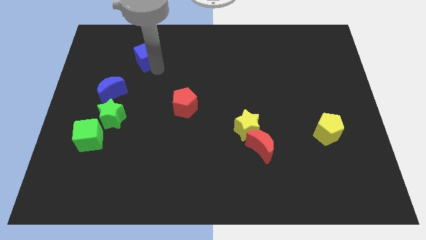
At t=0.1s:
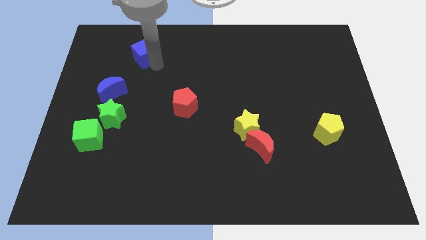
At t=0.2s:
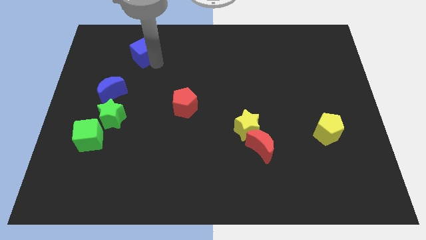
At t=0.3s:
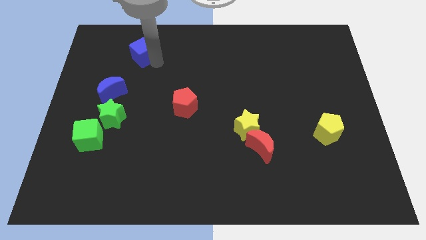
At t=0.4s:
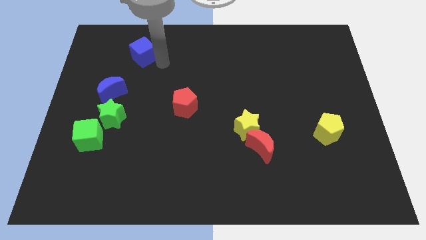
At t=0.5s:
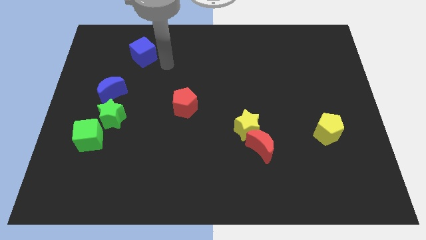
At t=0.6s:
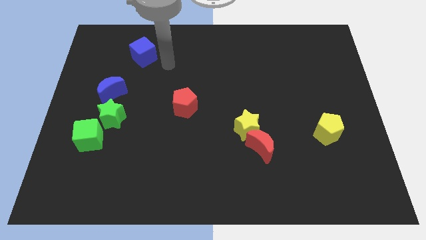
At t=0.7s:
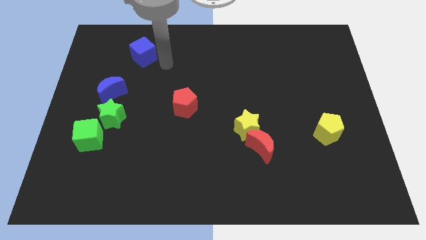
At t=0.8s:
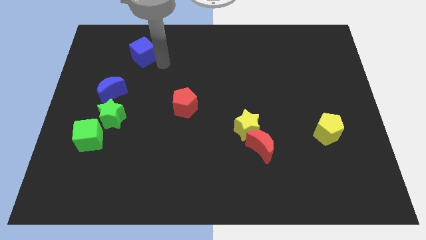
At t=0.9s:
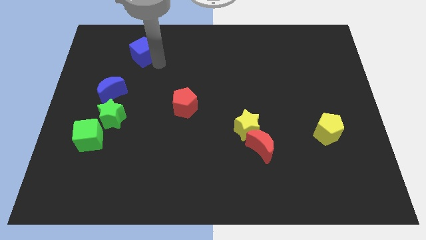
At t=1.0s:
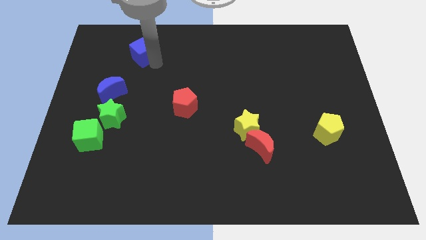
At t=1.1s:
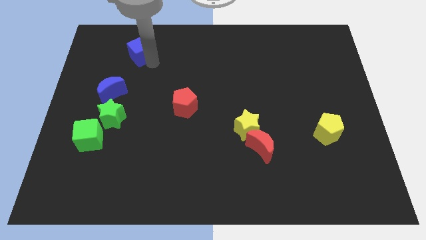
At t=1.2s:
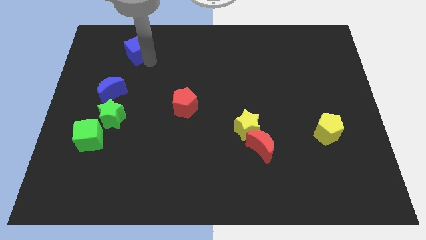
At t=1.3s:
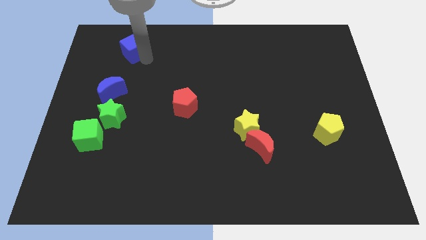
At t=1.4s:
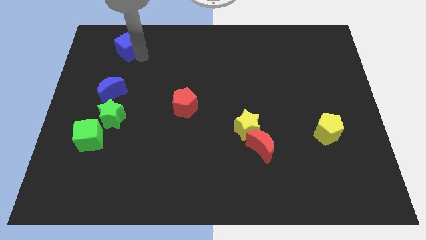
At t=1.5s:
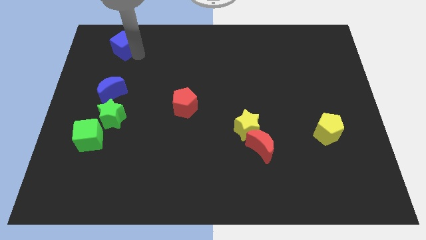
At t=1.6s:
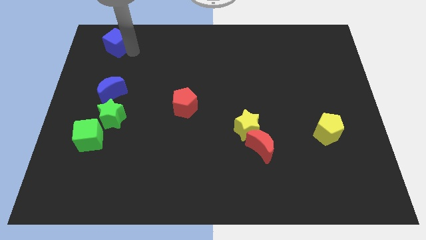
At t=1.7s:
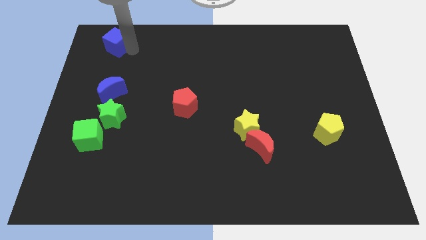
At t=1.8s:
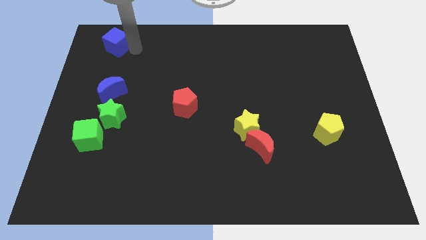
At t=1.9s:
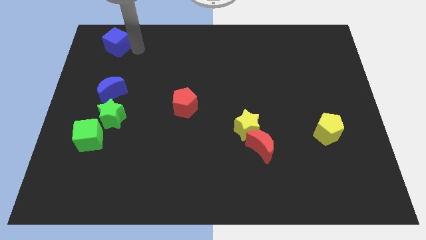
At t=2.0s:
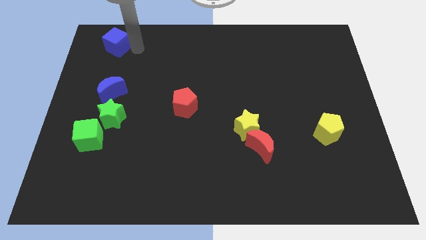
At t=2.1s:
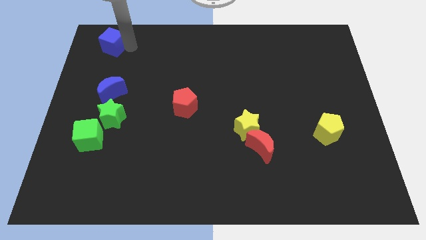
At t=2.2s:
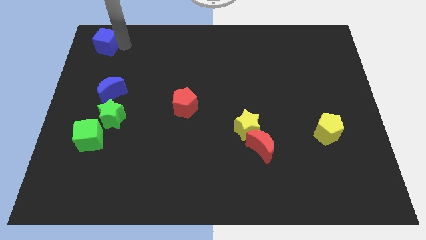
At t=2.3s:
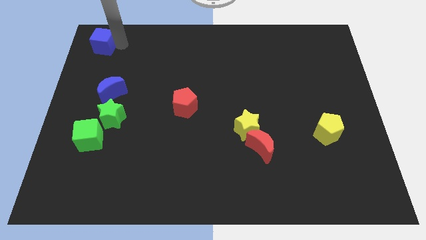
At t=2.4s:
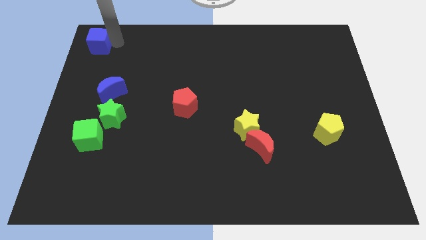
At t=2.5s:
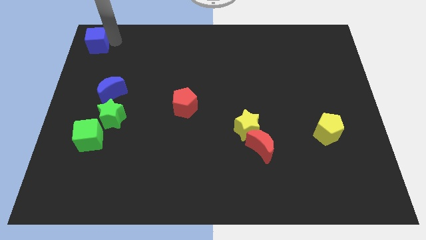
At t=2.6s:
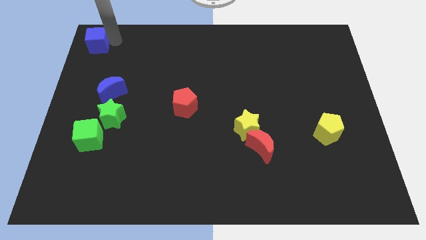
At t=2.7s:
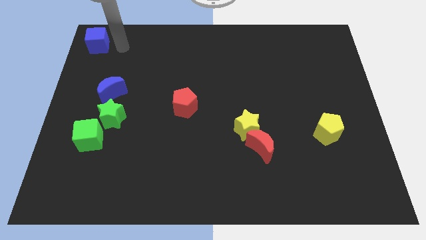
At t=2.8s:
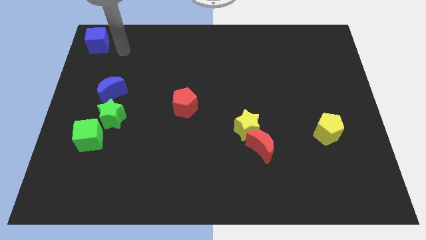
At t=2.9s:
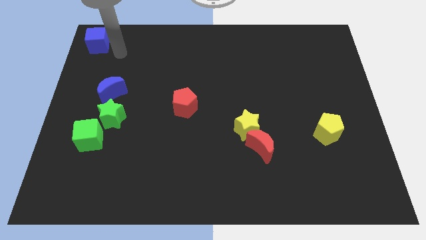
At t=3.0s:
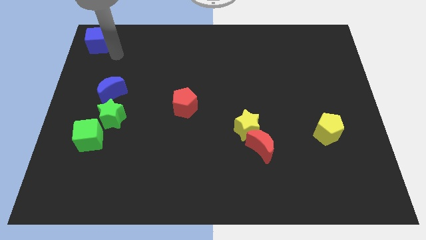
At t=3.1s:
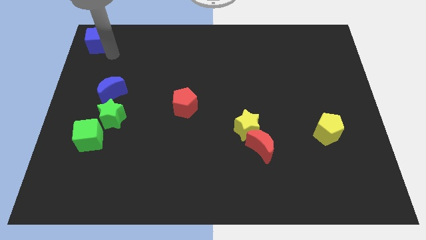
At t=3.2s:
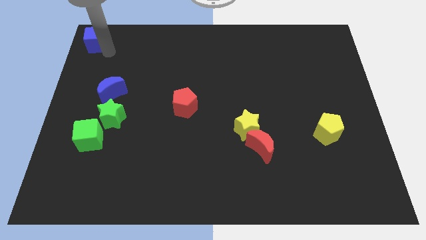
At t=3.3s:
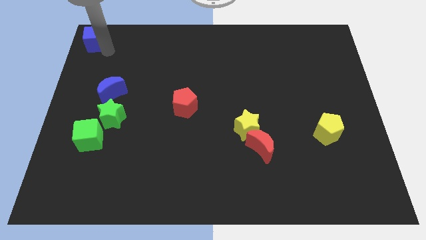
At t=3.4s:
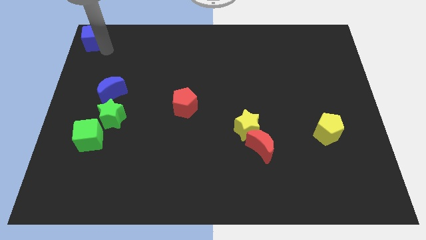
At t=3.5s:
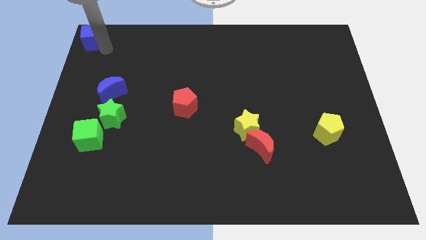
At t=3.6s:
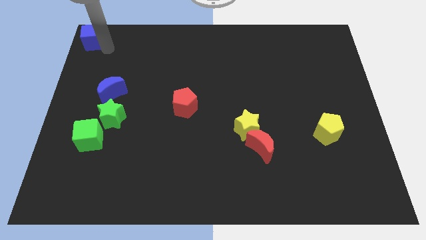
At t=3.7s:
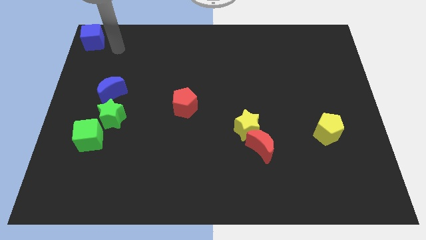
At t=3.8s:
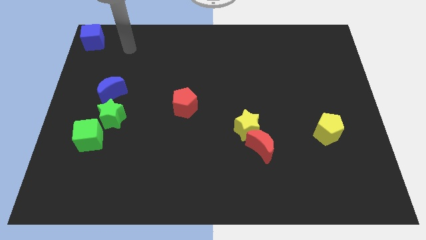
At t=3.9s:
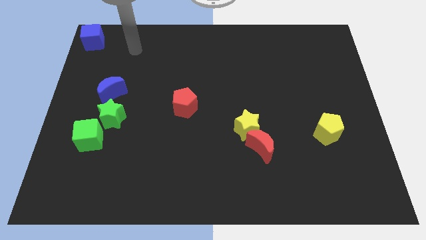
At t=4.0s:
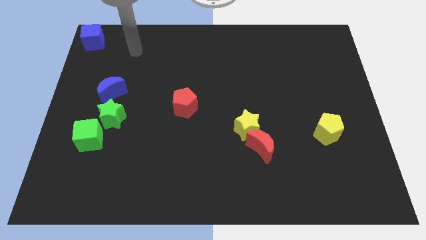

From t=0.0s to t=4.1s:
move the blue cube to the top corner of the board

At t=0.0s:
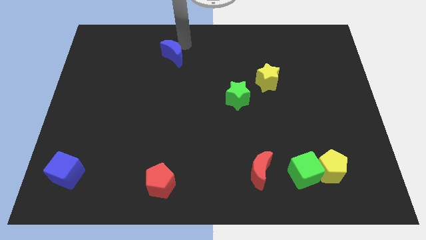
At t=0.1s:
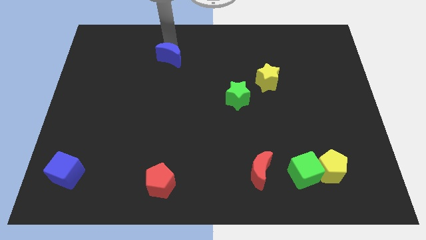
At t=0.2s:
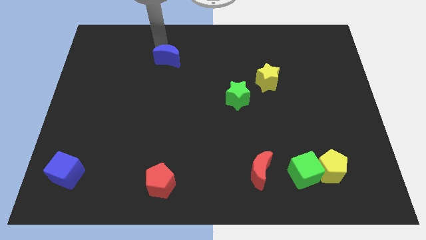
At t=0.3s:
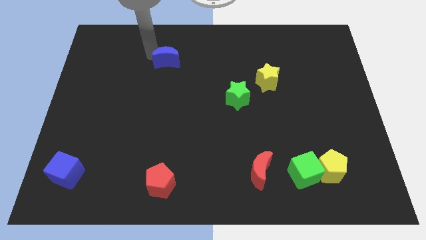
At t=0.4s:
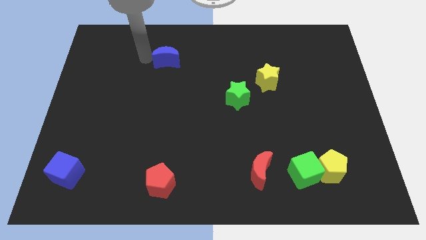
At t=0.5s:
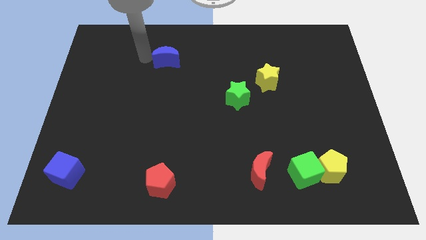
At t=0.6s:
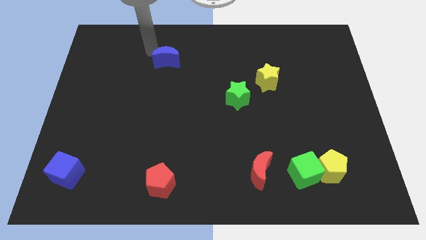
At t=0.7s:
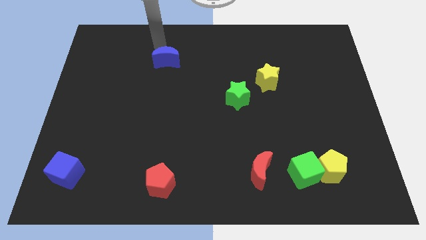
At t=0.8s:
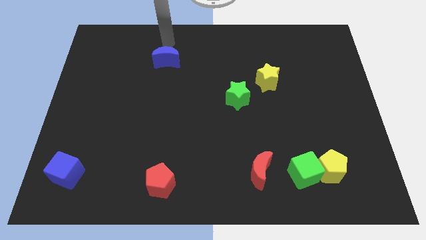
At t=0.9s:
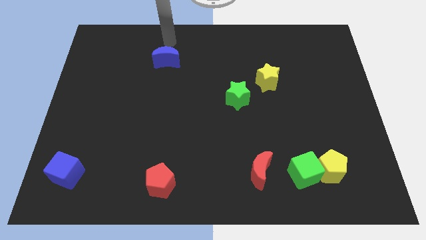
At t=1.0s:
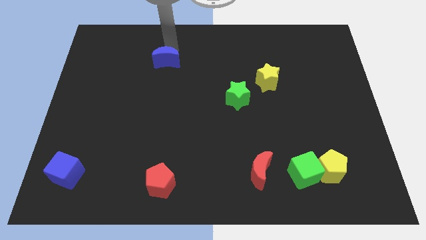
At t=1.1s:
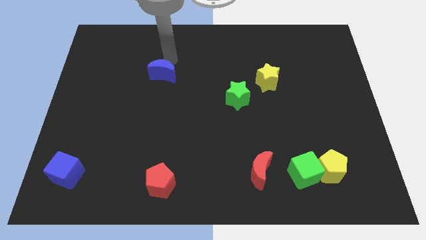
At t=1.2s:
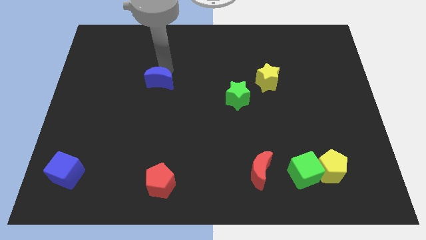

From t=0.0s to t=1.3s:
push the blue crescent downwards on the board

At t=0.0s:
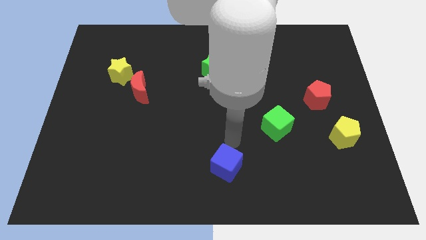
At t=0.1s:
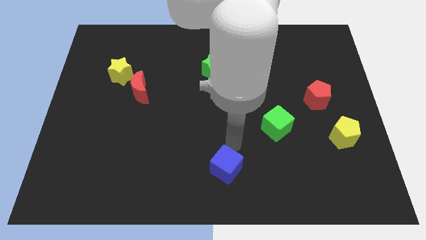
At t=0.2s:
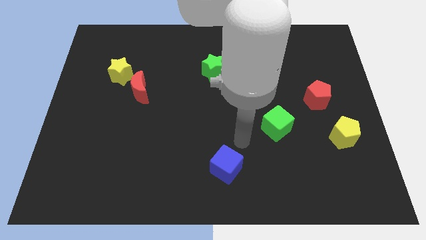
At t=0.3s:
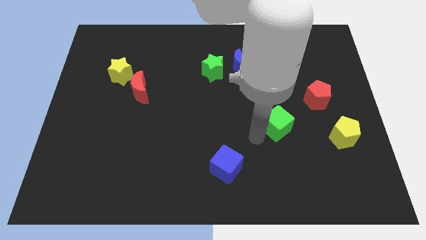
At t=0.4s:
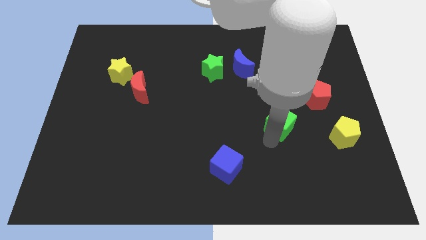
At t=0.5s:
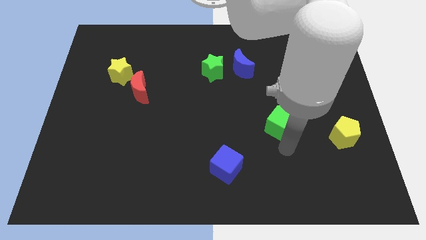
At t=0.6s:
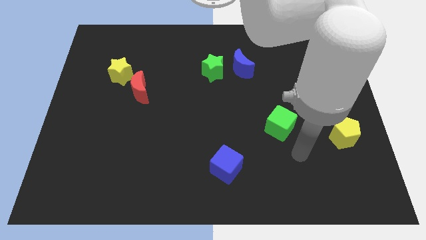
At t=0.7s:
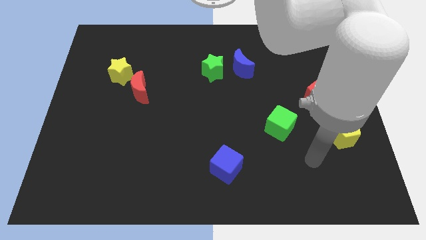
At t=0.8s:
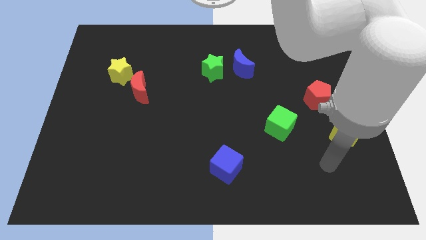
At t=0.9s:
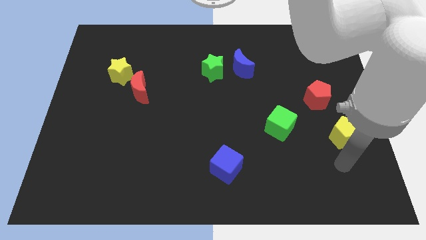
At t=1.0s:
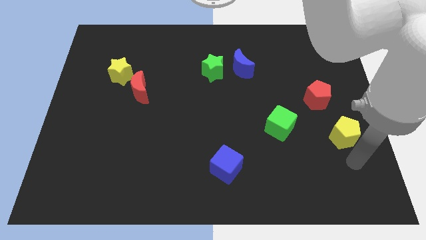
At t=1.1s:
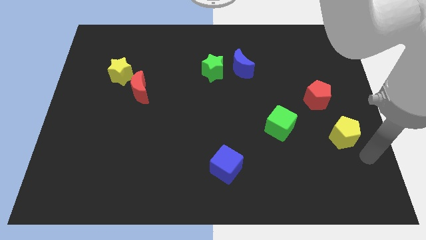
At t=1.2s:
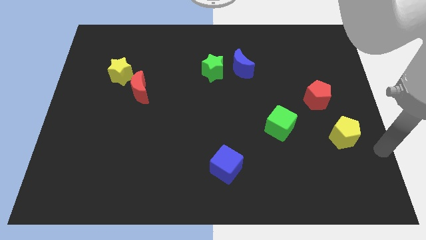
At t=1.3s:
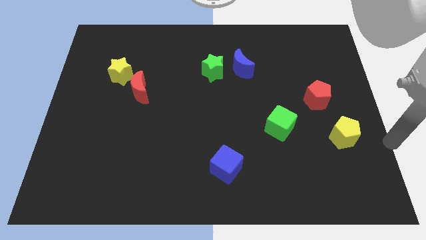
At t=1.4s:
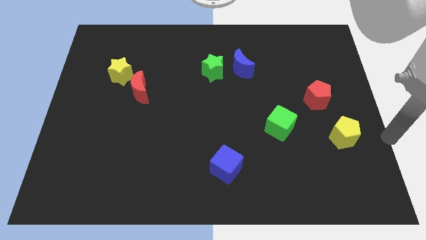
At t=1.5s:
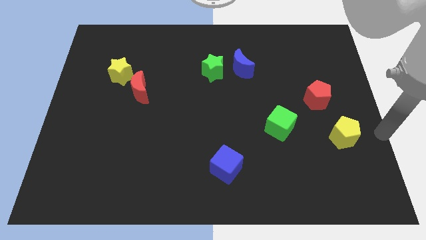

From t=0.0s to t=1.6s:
move your arm away from the blue cube

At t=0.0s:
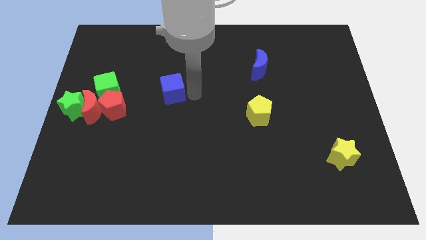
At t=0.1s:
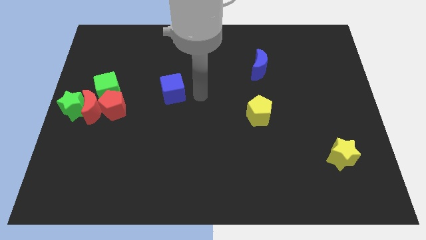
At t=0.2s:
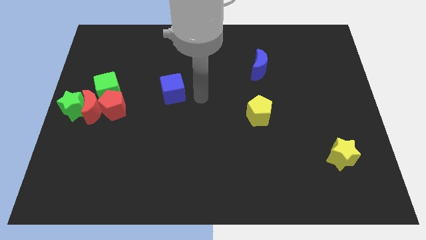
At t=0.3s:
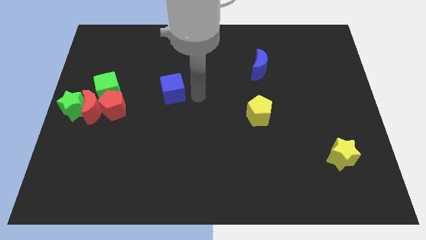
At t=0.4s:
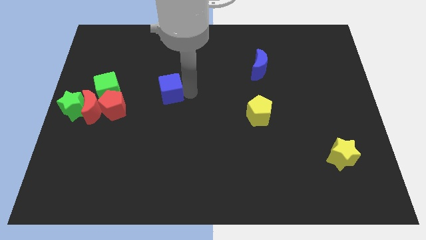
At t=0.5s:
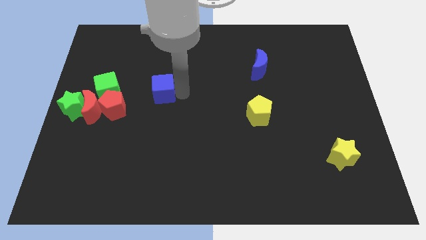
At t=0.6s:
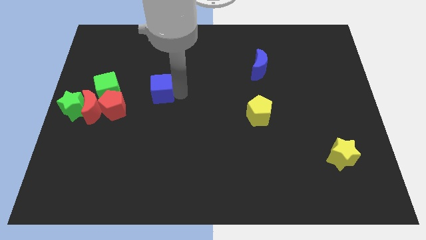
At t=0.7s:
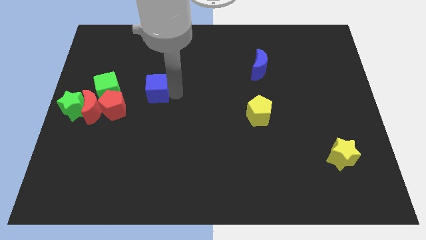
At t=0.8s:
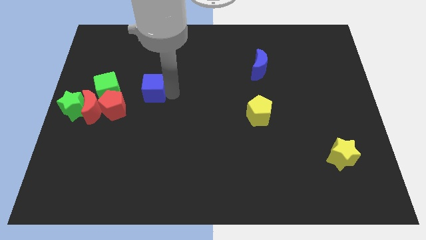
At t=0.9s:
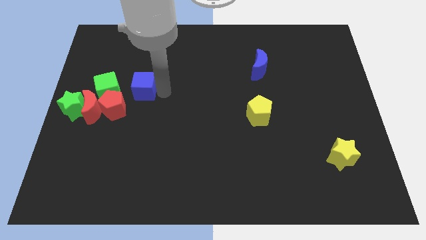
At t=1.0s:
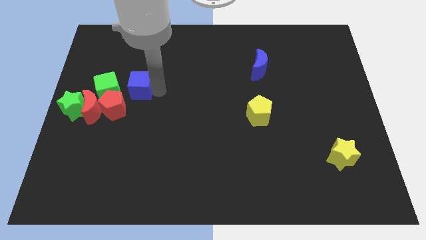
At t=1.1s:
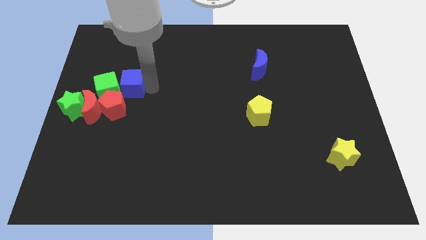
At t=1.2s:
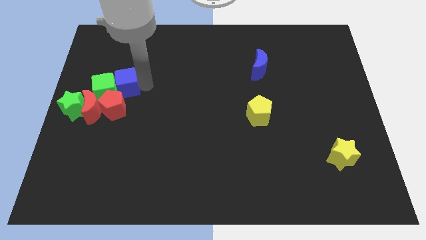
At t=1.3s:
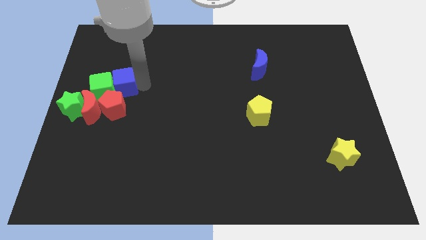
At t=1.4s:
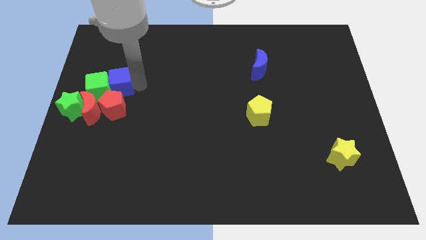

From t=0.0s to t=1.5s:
move blue cube into the green cube

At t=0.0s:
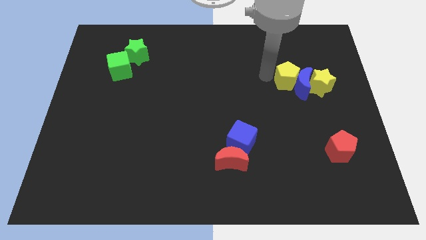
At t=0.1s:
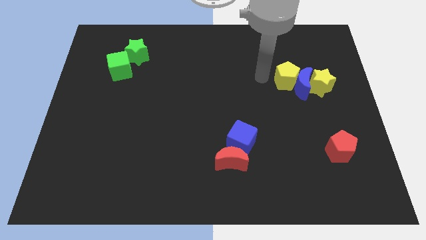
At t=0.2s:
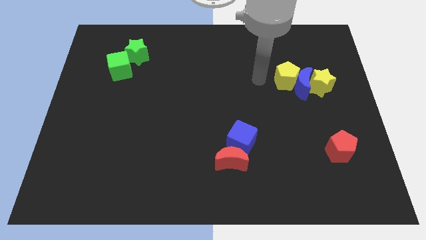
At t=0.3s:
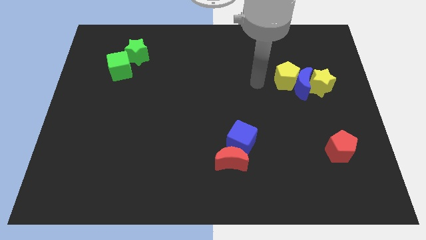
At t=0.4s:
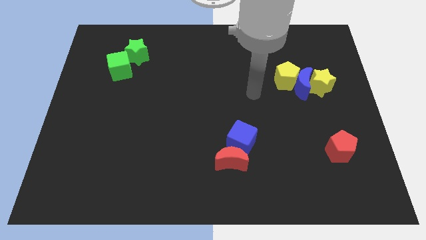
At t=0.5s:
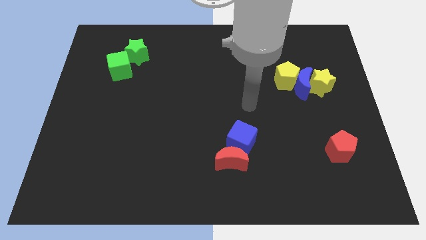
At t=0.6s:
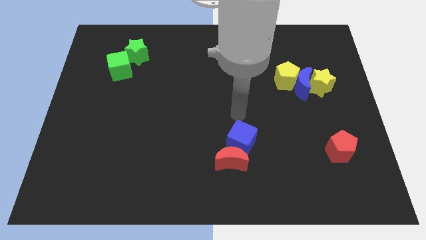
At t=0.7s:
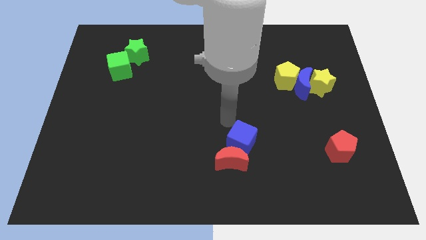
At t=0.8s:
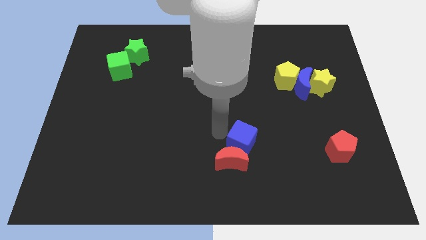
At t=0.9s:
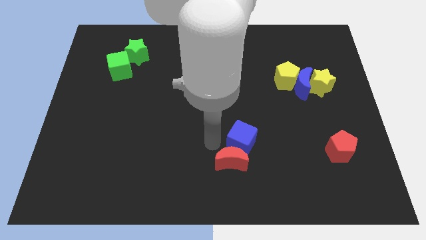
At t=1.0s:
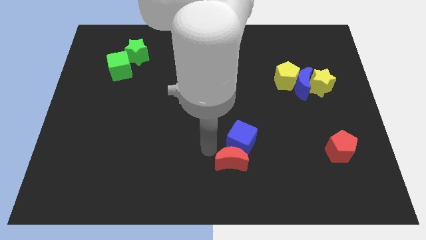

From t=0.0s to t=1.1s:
move your arm away from yellow pentagon
